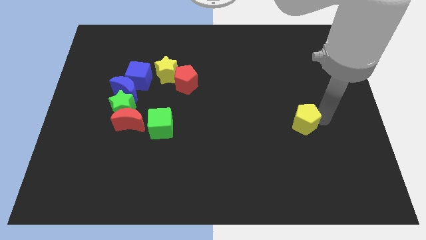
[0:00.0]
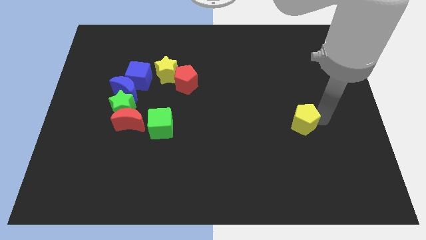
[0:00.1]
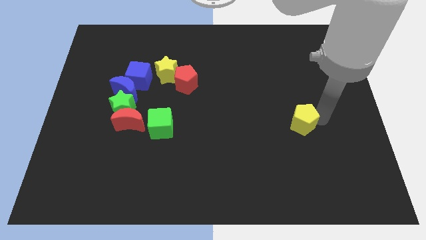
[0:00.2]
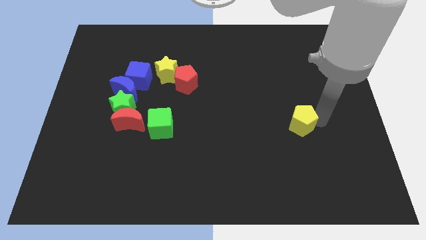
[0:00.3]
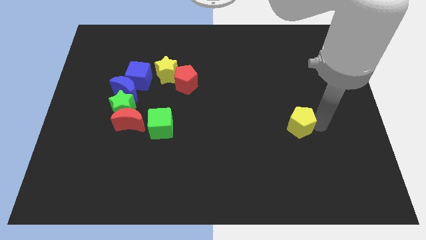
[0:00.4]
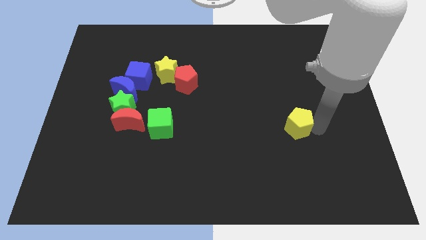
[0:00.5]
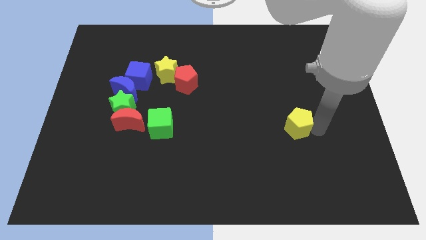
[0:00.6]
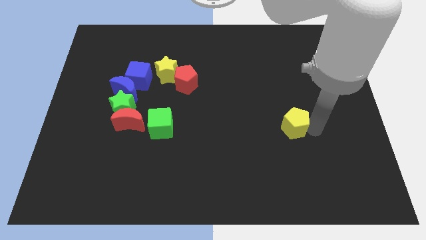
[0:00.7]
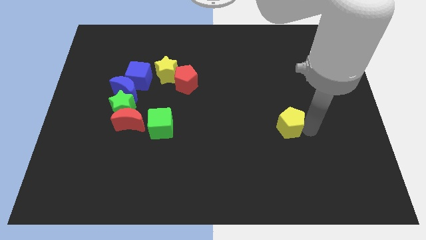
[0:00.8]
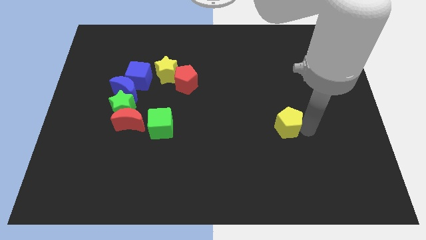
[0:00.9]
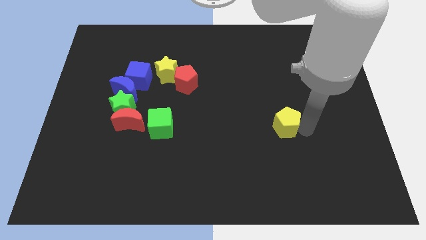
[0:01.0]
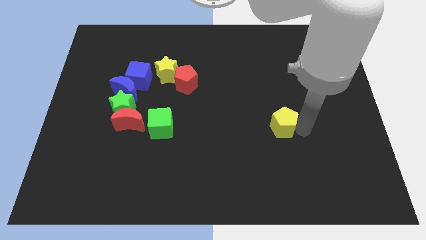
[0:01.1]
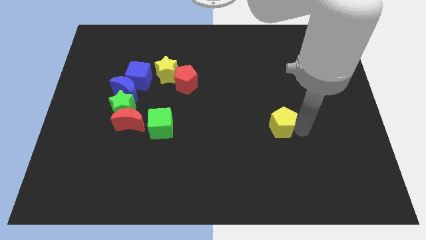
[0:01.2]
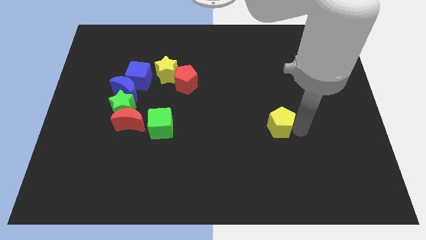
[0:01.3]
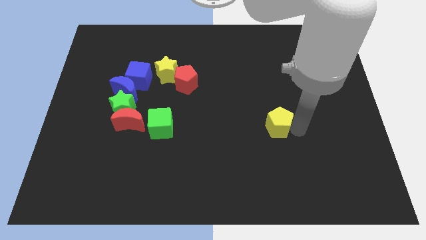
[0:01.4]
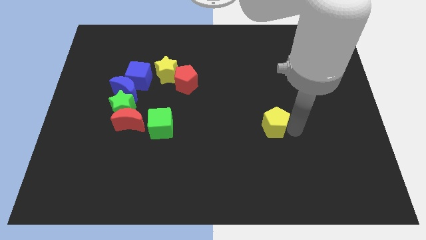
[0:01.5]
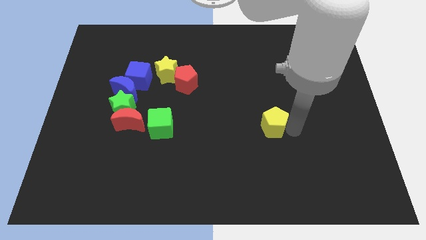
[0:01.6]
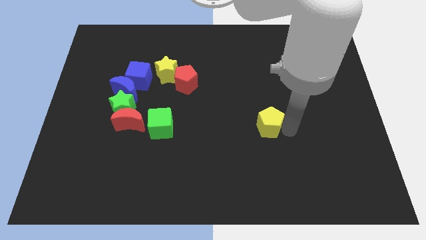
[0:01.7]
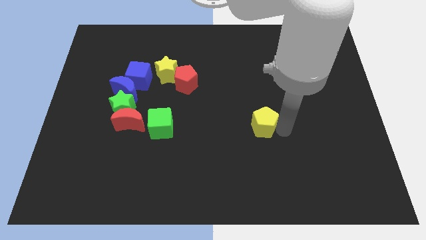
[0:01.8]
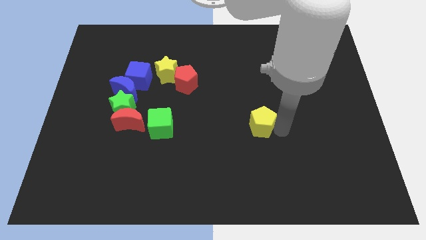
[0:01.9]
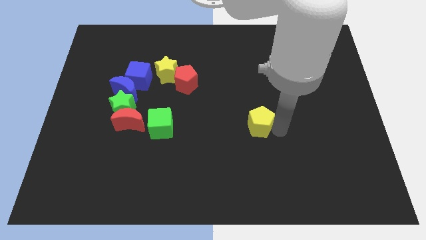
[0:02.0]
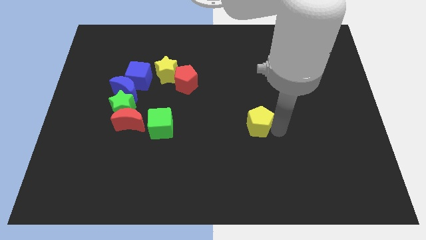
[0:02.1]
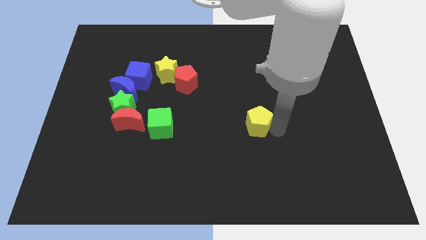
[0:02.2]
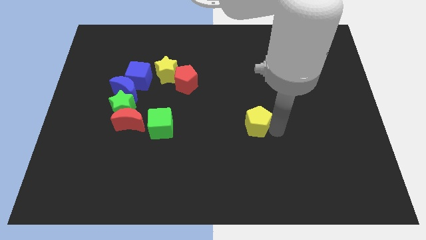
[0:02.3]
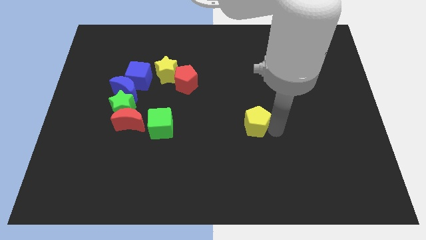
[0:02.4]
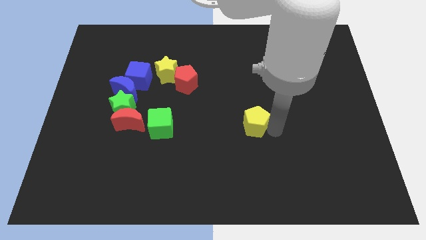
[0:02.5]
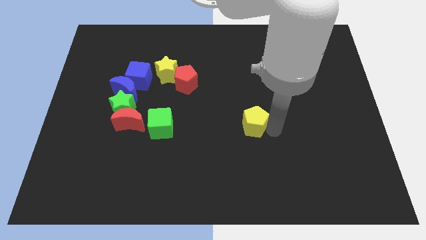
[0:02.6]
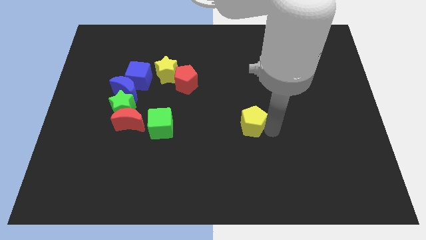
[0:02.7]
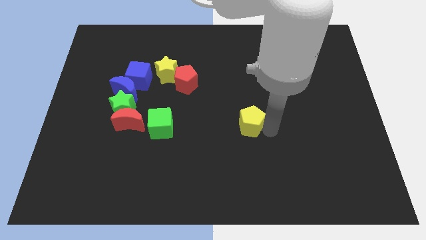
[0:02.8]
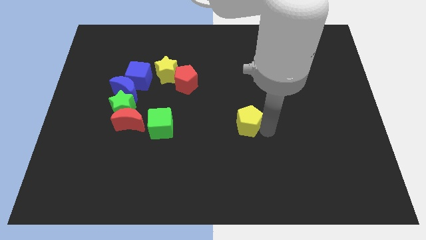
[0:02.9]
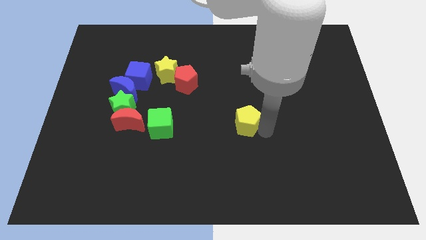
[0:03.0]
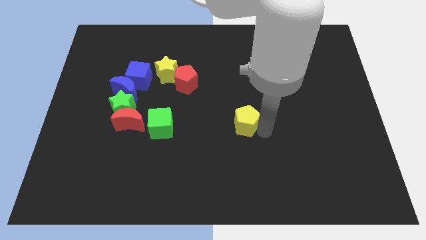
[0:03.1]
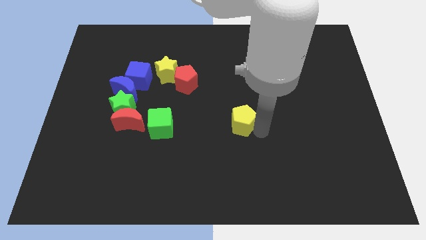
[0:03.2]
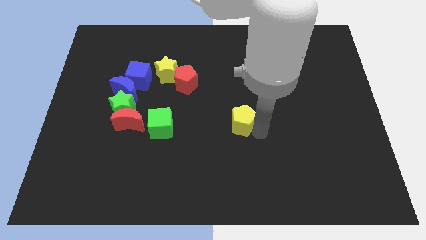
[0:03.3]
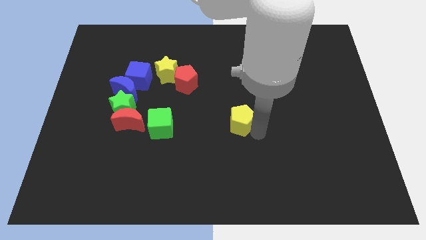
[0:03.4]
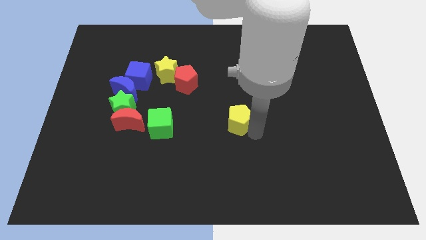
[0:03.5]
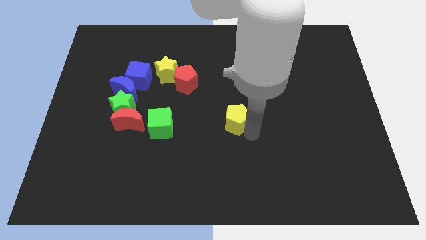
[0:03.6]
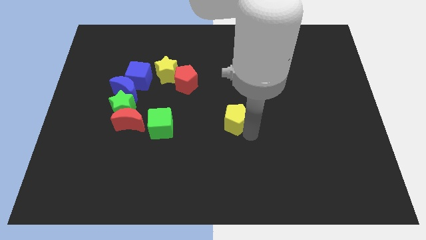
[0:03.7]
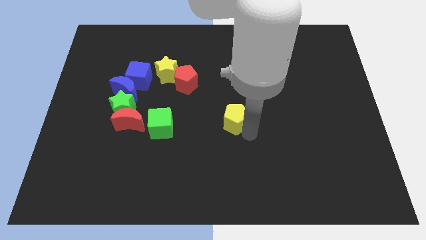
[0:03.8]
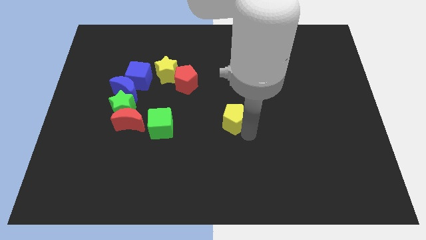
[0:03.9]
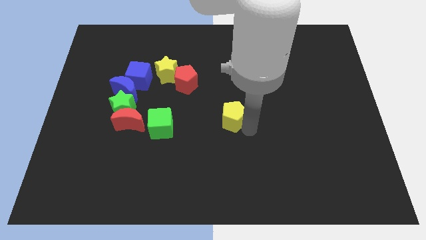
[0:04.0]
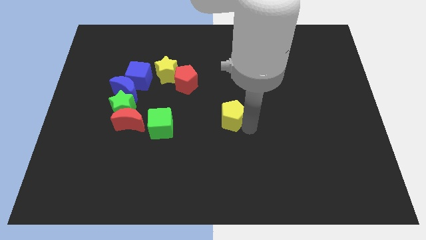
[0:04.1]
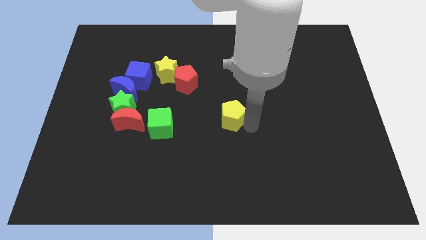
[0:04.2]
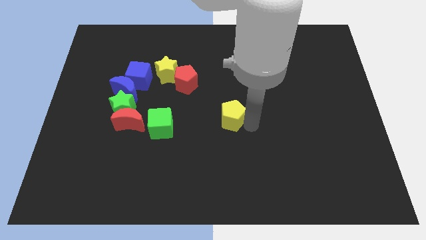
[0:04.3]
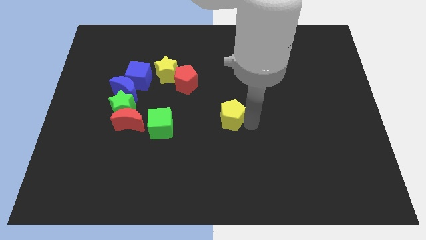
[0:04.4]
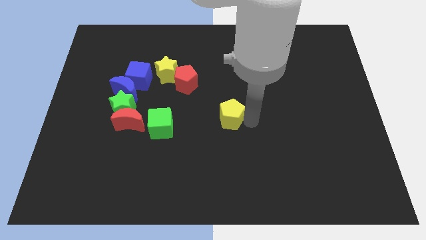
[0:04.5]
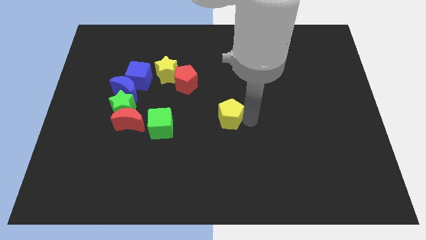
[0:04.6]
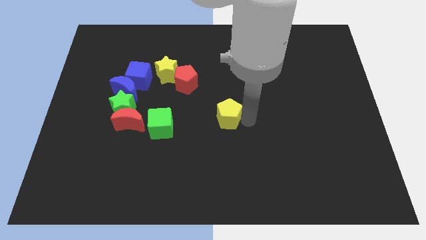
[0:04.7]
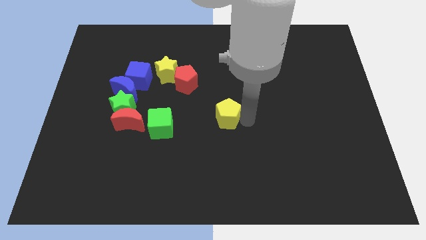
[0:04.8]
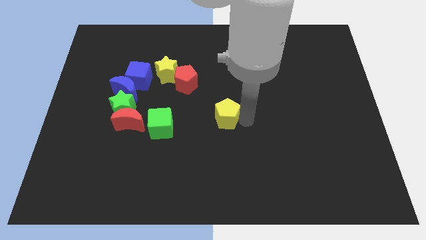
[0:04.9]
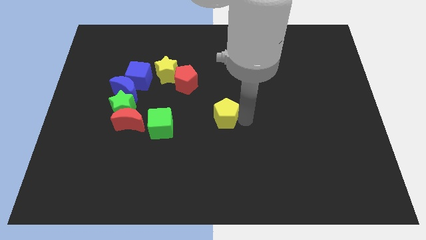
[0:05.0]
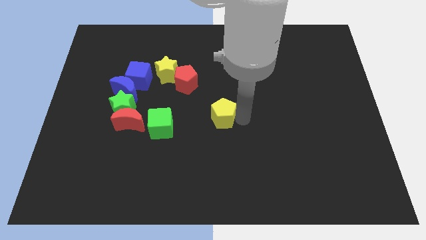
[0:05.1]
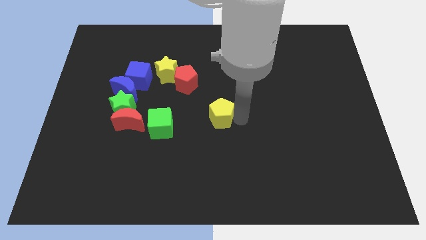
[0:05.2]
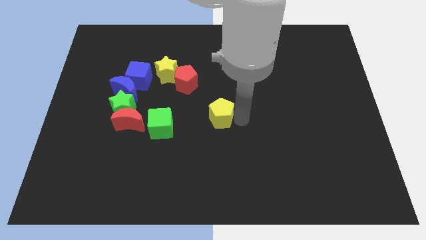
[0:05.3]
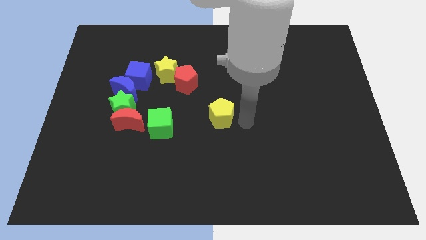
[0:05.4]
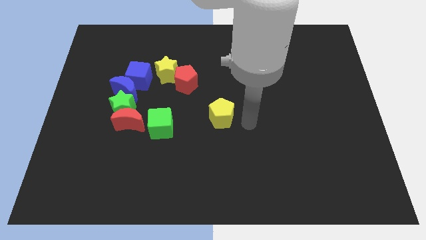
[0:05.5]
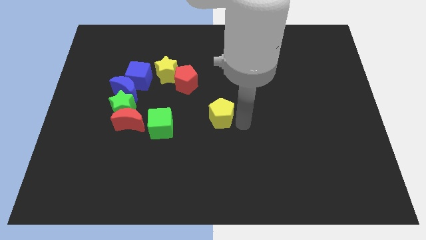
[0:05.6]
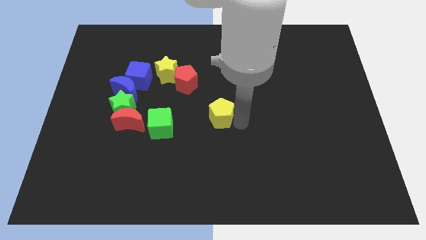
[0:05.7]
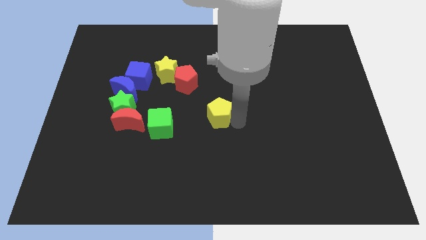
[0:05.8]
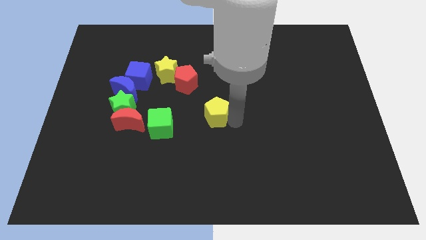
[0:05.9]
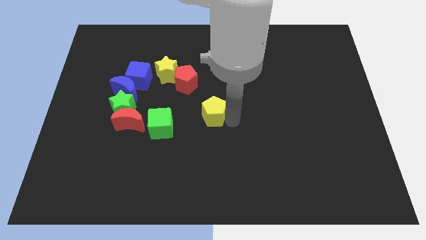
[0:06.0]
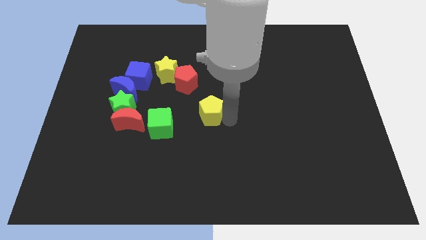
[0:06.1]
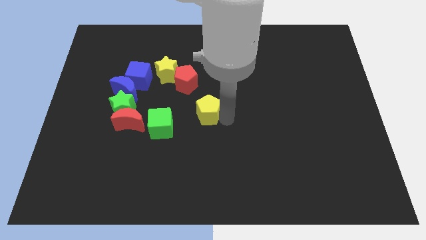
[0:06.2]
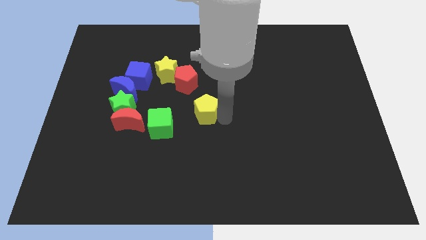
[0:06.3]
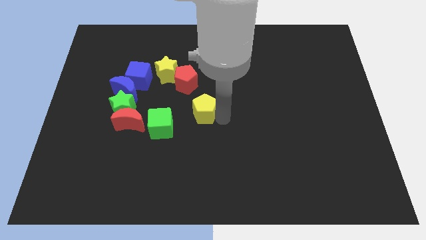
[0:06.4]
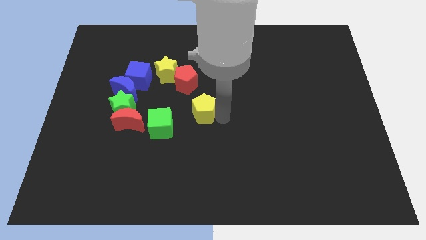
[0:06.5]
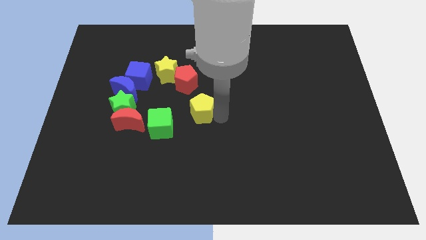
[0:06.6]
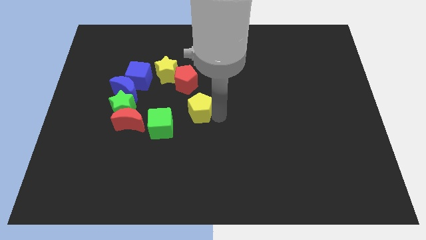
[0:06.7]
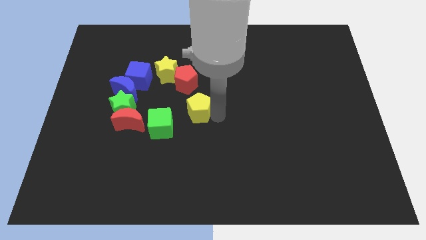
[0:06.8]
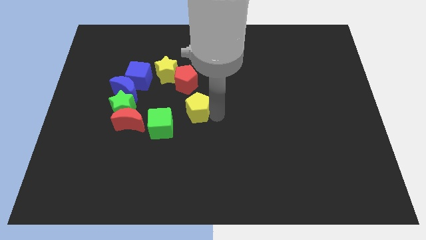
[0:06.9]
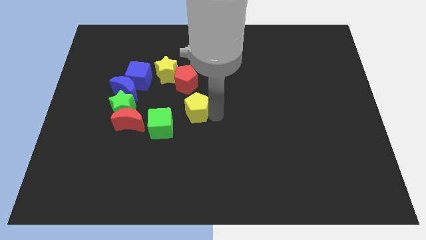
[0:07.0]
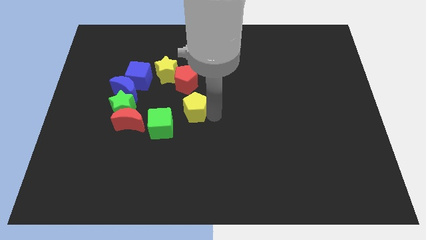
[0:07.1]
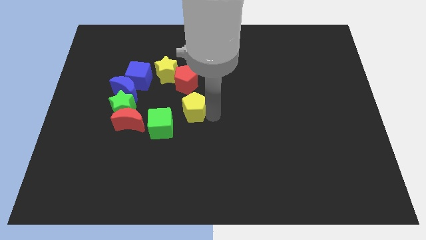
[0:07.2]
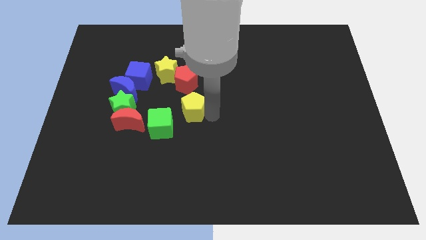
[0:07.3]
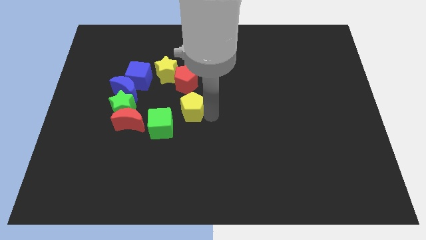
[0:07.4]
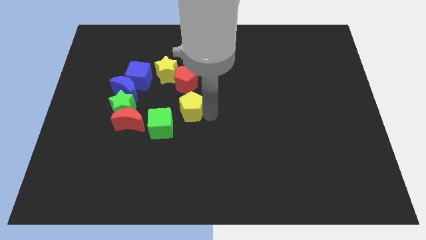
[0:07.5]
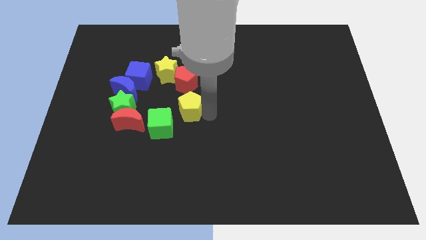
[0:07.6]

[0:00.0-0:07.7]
push yellow pentagon into the group of blocks

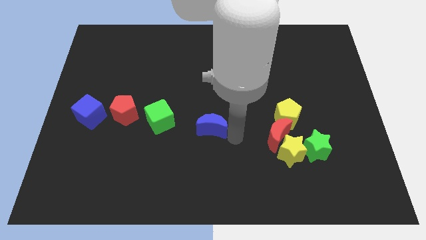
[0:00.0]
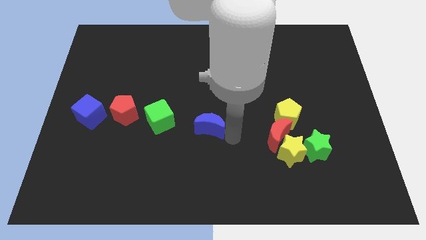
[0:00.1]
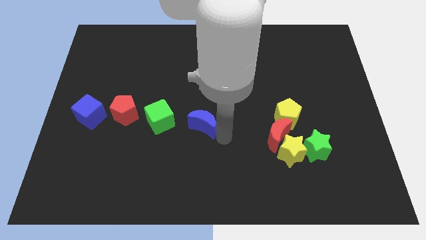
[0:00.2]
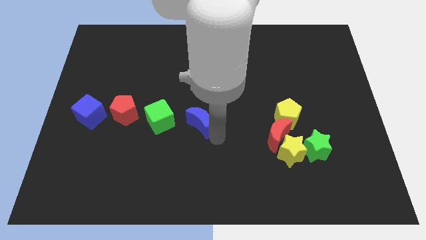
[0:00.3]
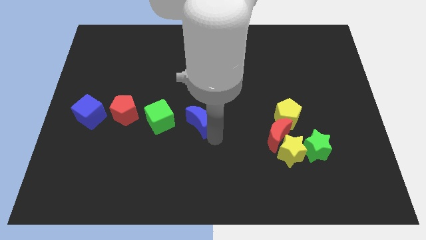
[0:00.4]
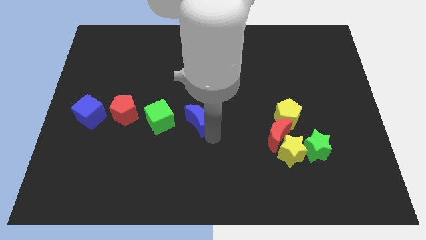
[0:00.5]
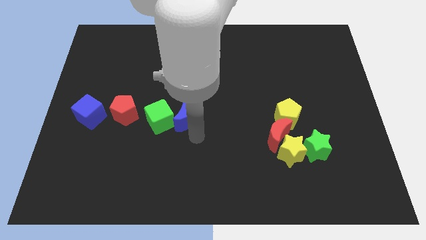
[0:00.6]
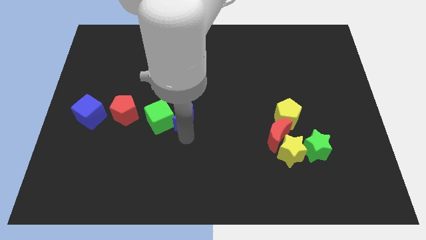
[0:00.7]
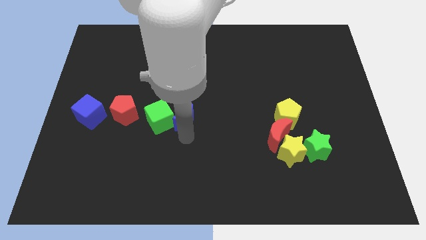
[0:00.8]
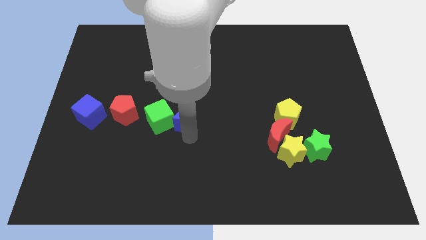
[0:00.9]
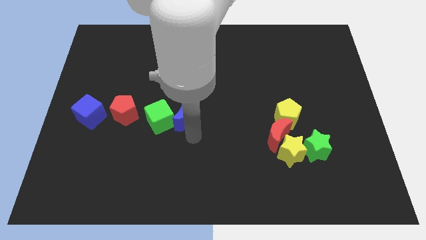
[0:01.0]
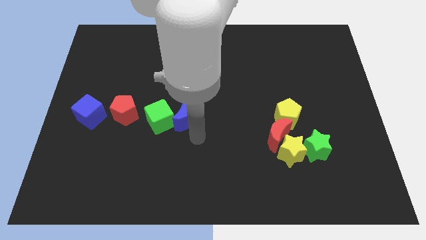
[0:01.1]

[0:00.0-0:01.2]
place blue moon to the right side of green cube

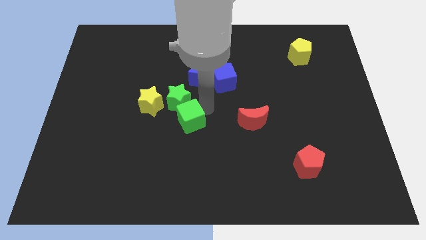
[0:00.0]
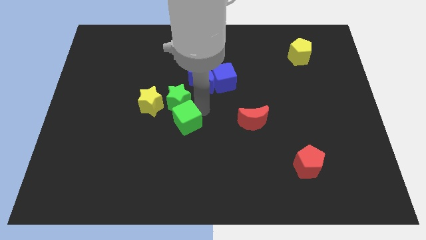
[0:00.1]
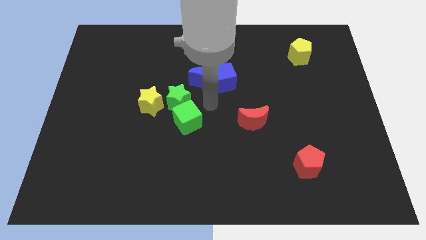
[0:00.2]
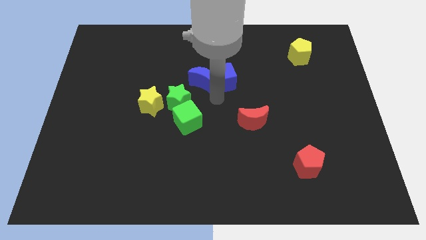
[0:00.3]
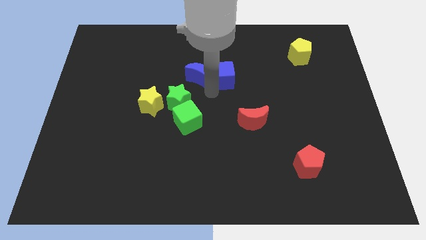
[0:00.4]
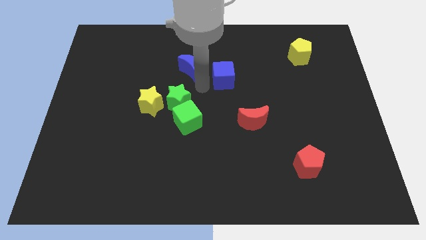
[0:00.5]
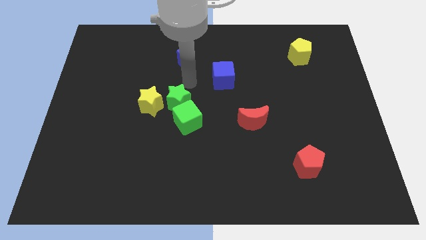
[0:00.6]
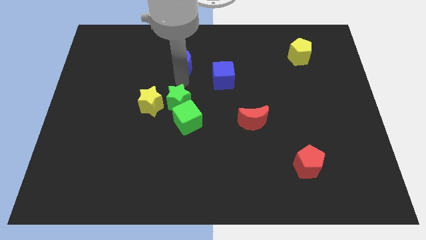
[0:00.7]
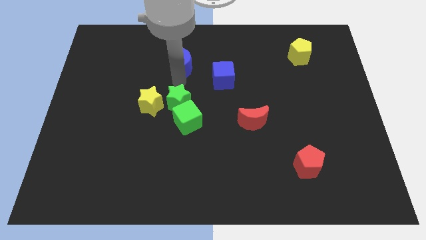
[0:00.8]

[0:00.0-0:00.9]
push blue crescent slightly towards up
